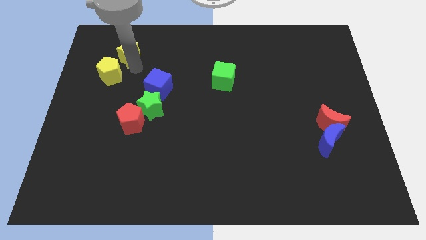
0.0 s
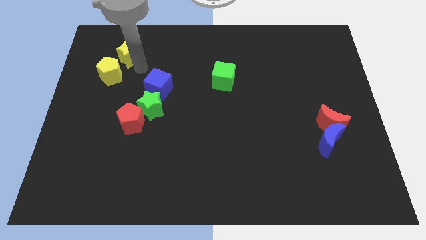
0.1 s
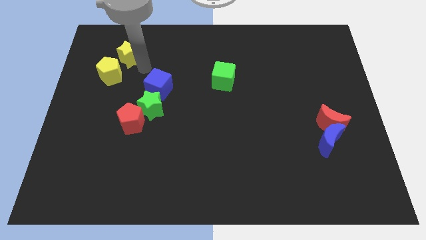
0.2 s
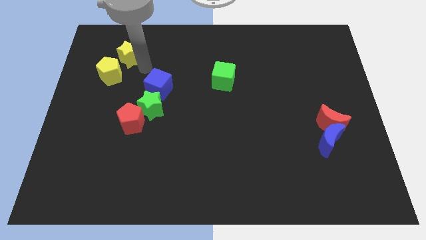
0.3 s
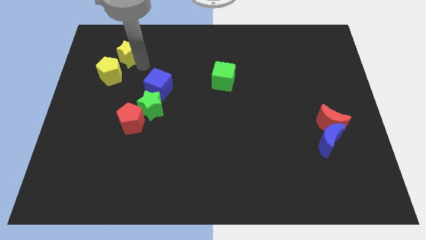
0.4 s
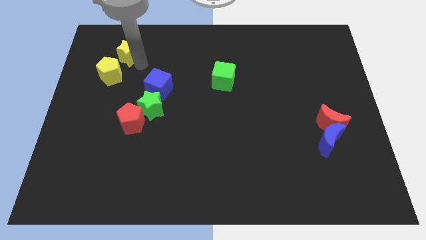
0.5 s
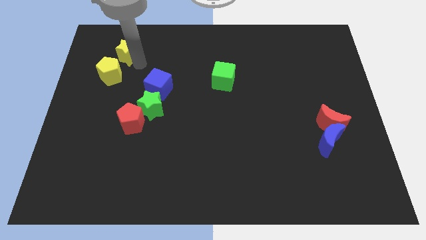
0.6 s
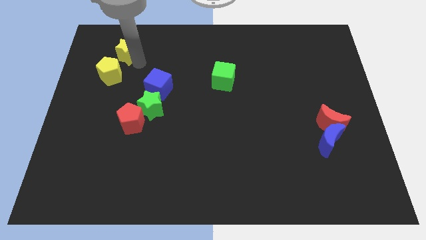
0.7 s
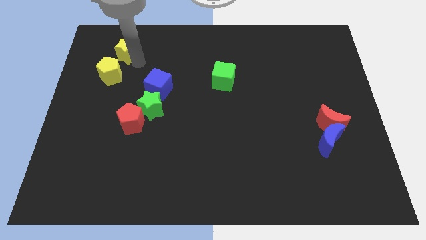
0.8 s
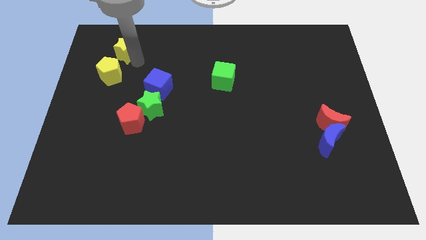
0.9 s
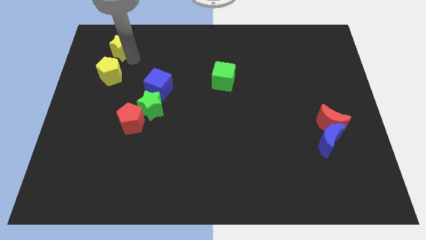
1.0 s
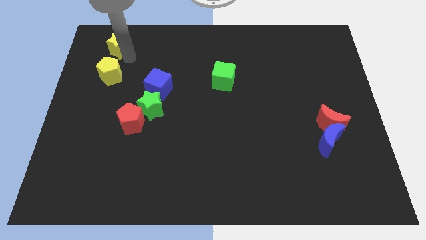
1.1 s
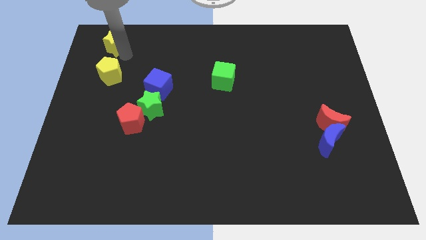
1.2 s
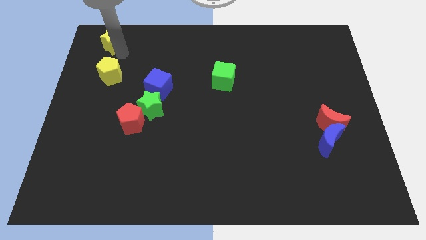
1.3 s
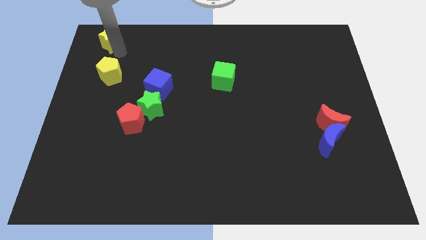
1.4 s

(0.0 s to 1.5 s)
place yellow star to the top of yellow pentagon

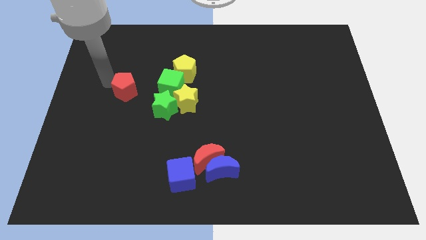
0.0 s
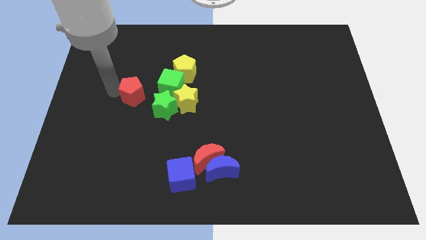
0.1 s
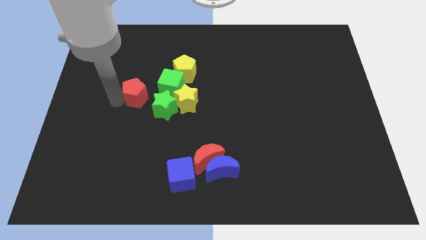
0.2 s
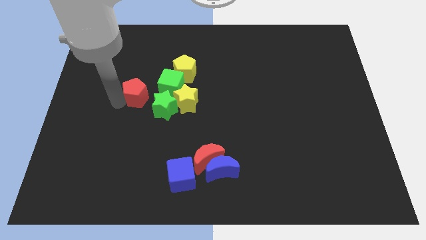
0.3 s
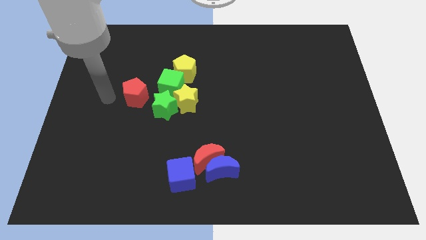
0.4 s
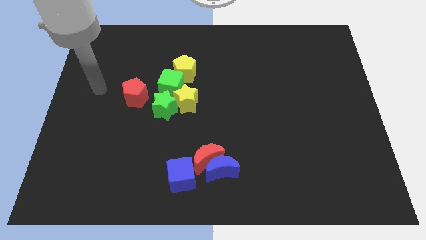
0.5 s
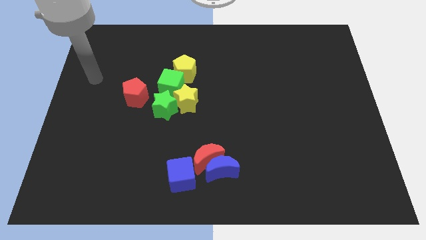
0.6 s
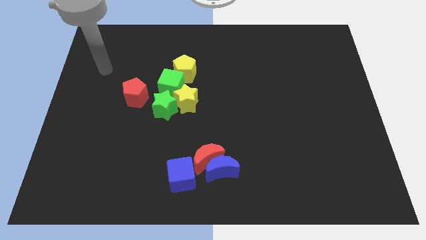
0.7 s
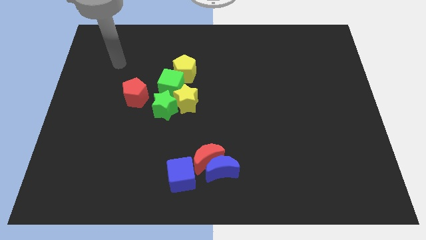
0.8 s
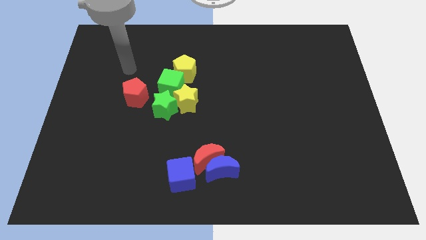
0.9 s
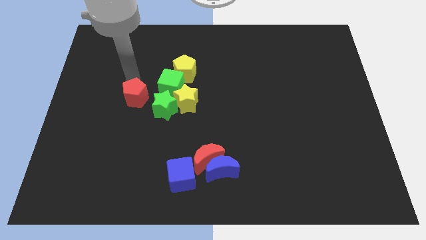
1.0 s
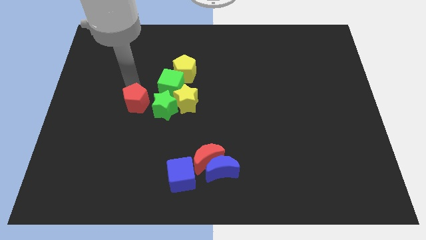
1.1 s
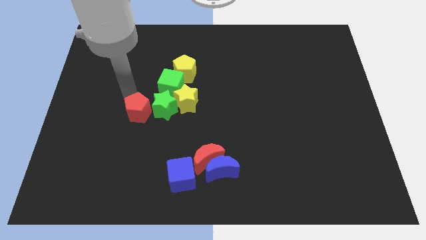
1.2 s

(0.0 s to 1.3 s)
put the red pentagon left to the green star

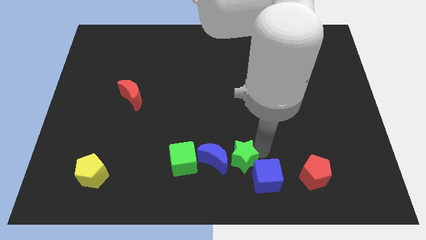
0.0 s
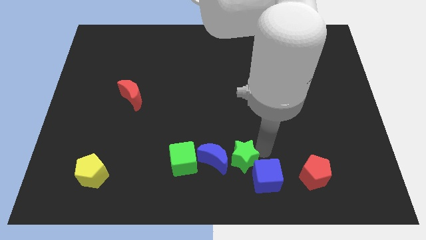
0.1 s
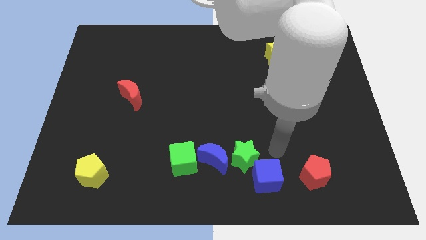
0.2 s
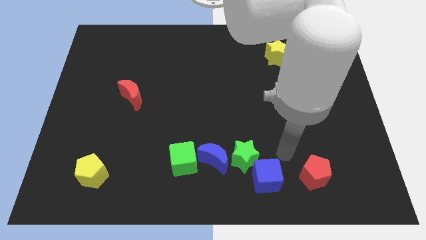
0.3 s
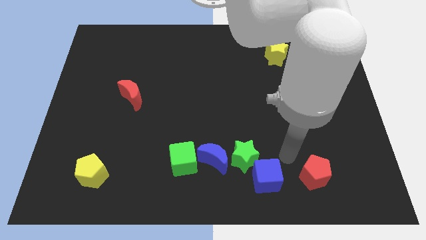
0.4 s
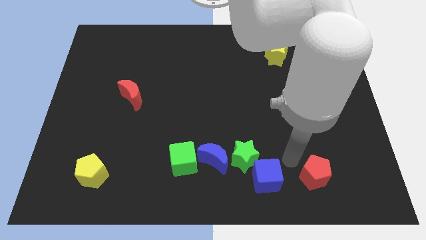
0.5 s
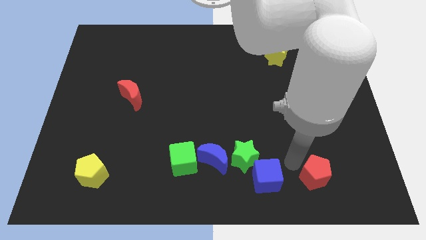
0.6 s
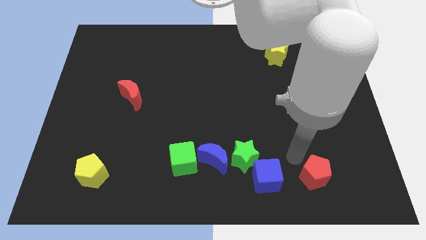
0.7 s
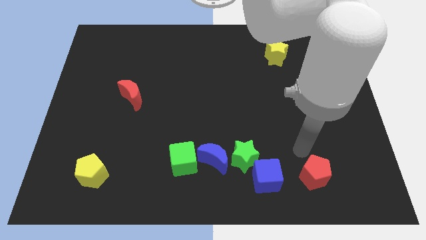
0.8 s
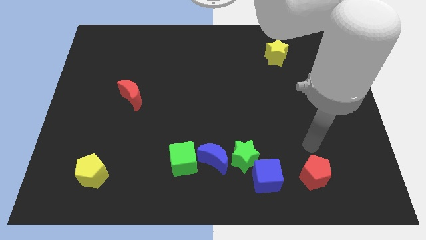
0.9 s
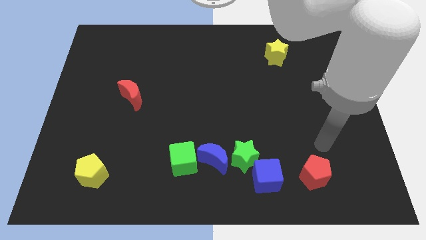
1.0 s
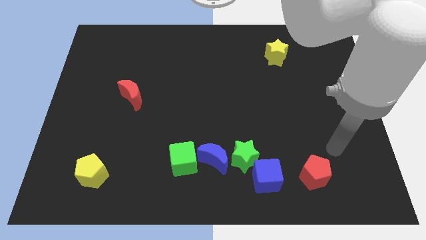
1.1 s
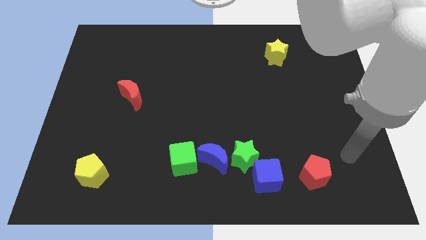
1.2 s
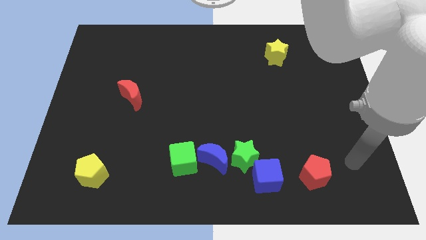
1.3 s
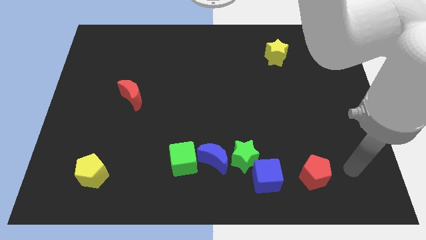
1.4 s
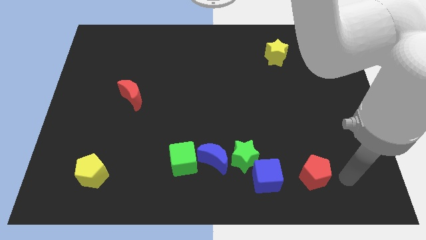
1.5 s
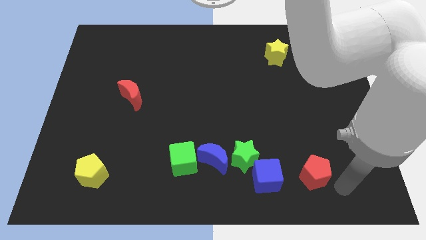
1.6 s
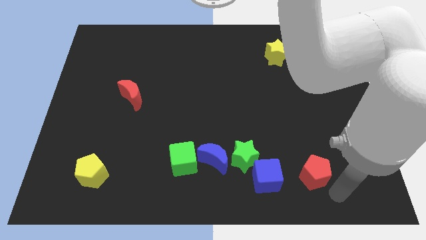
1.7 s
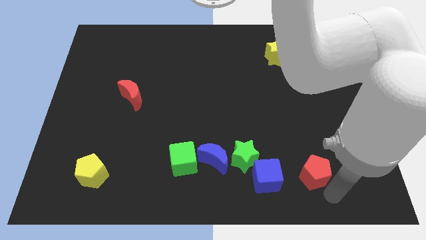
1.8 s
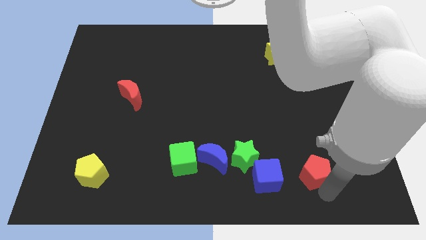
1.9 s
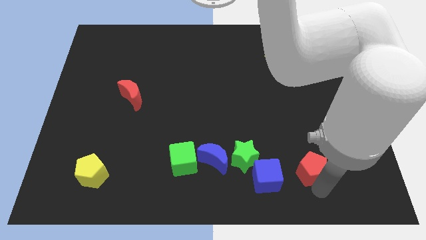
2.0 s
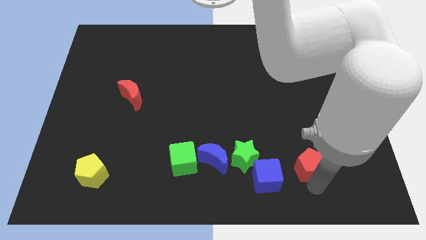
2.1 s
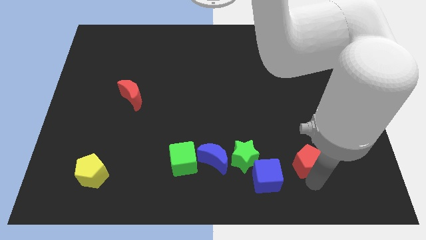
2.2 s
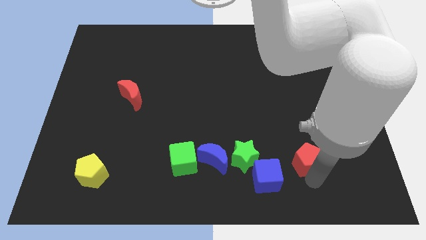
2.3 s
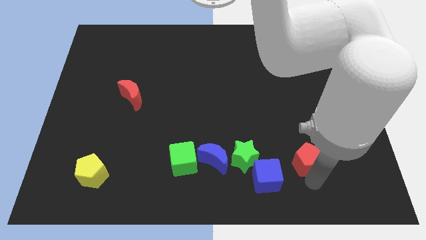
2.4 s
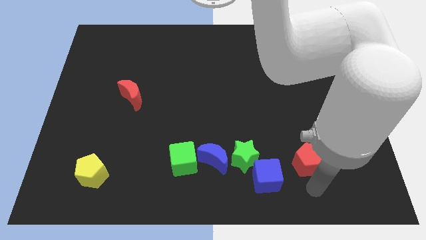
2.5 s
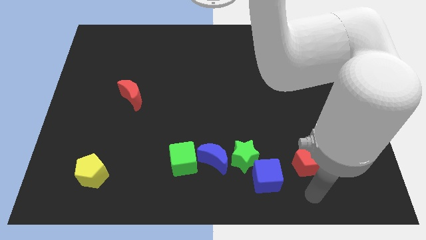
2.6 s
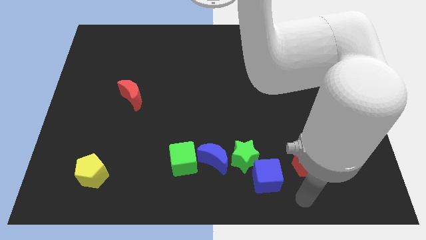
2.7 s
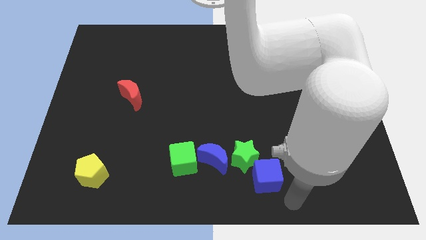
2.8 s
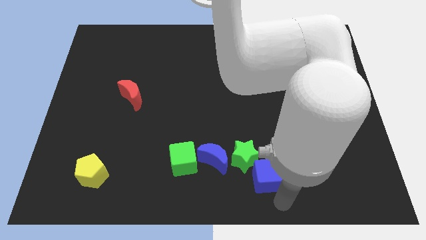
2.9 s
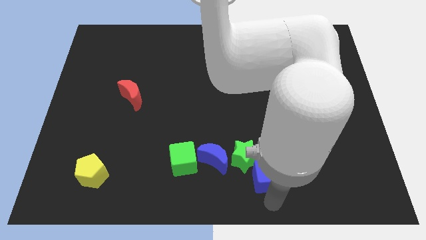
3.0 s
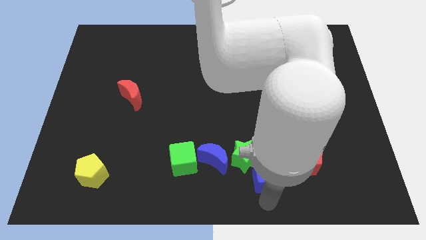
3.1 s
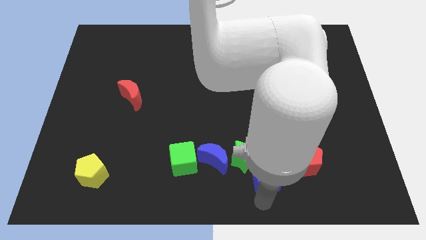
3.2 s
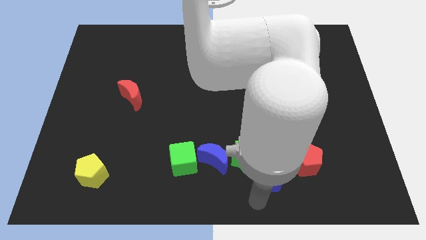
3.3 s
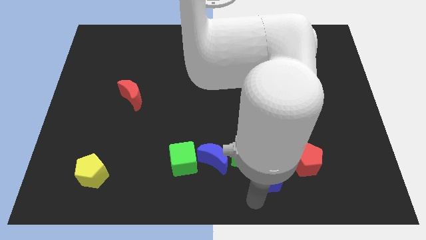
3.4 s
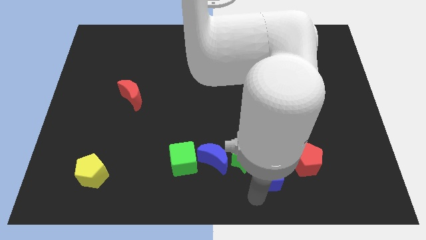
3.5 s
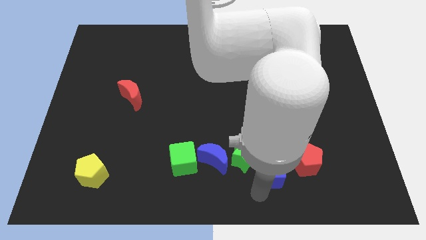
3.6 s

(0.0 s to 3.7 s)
drag the red pentagon diagonally top right to the blue cube

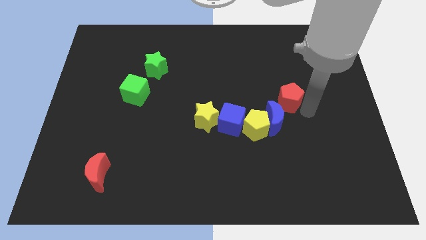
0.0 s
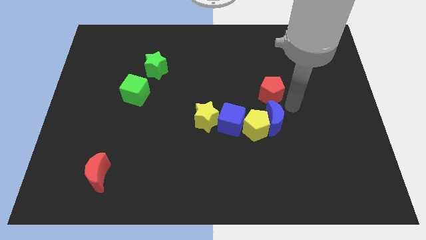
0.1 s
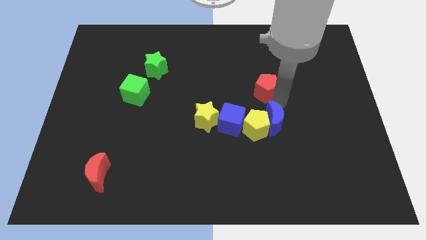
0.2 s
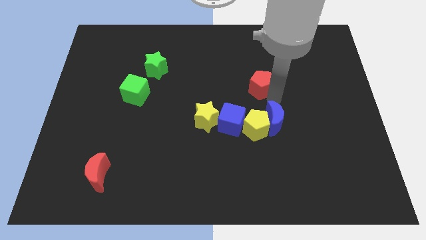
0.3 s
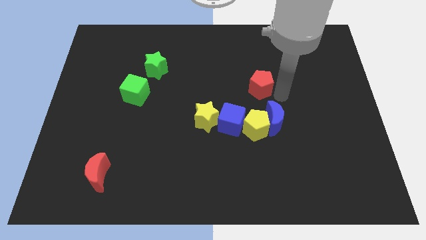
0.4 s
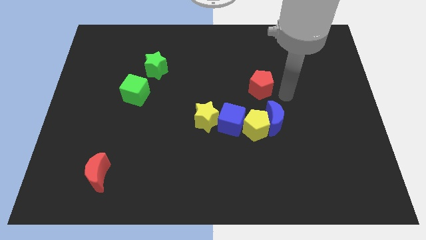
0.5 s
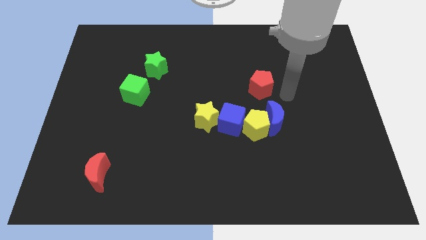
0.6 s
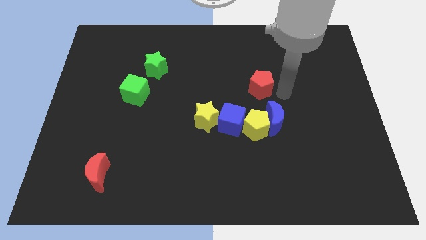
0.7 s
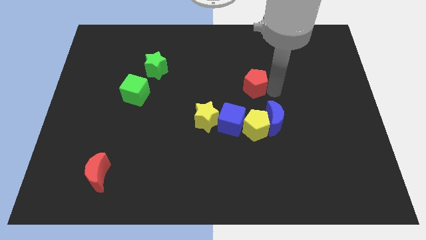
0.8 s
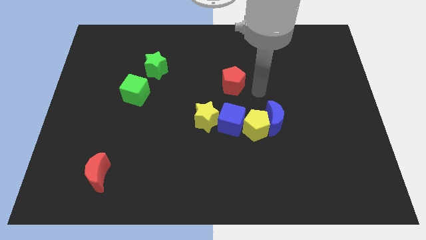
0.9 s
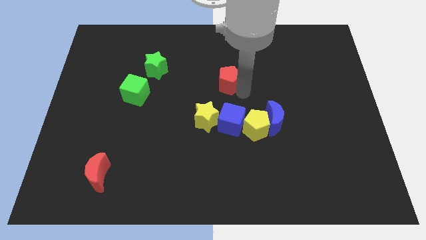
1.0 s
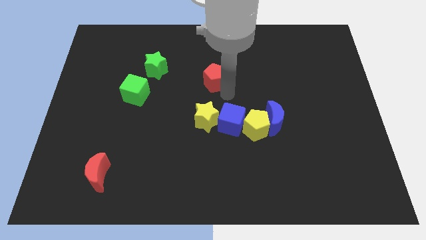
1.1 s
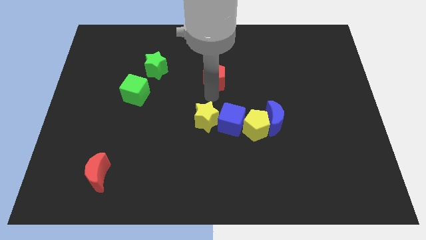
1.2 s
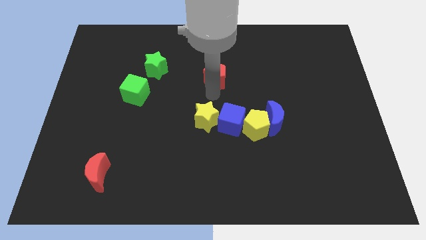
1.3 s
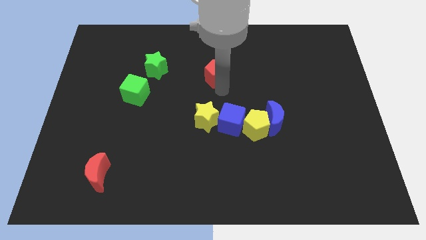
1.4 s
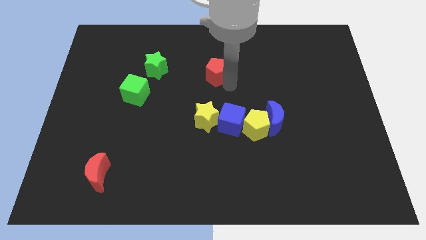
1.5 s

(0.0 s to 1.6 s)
place the red pentagon above the yellow star

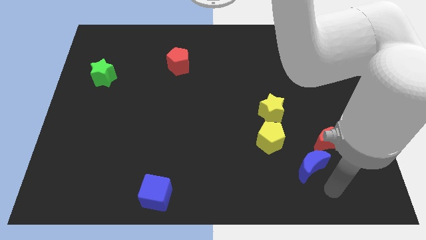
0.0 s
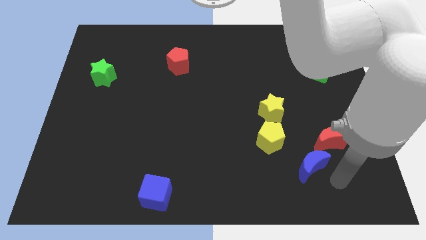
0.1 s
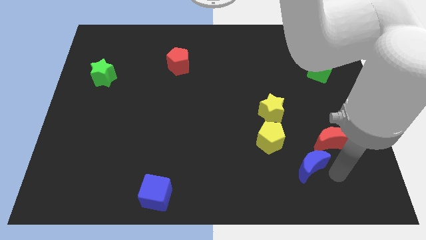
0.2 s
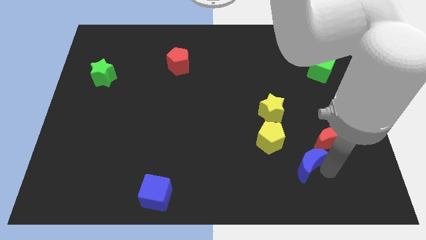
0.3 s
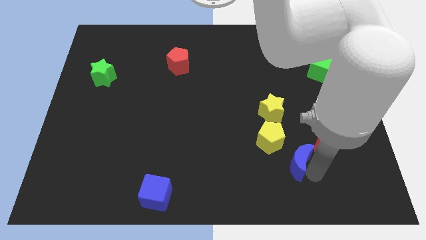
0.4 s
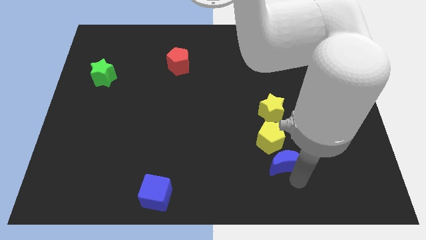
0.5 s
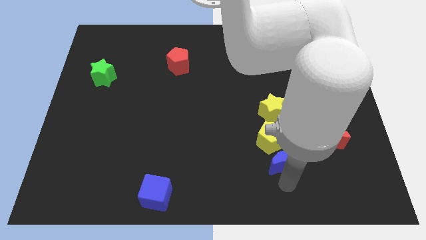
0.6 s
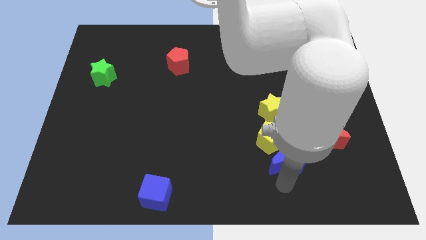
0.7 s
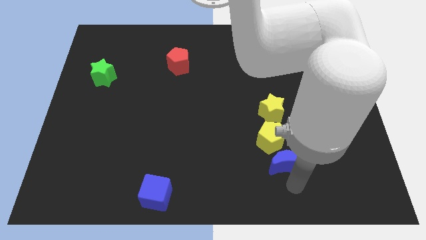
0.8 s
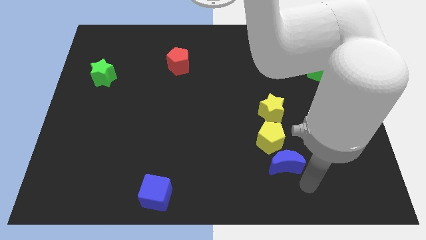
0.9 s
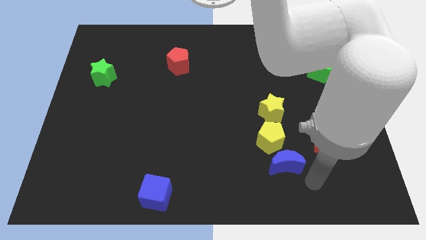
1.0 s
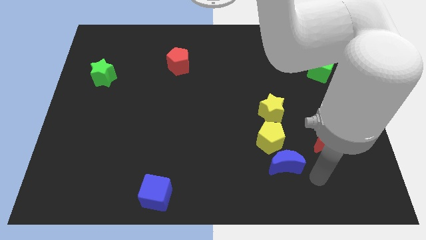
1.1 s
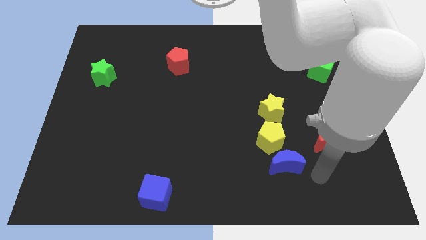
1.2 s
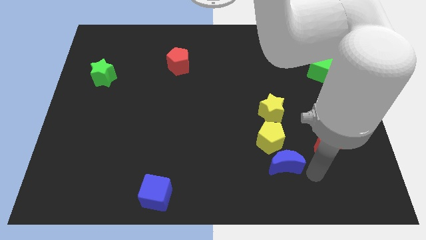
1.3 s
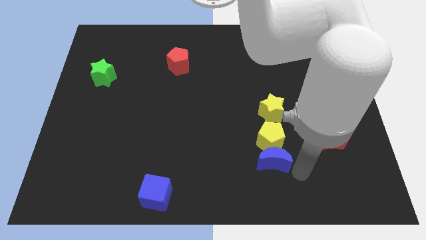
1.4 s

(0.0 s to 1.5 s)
push blue crescent below the yellow pentagon
